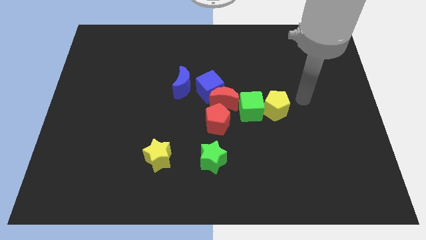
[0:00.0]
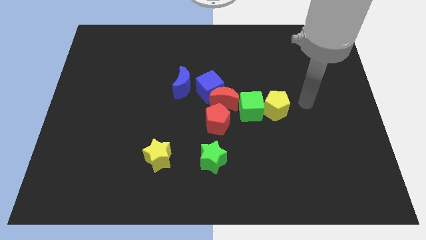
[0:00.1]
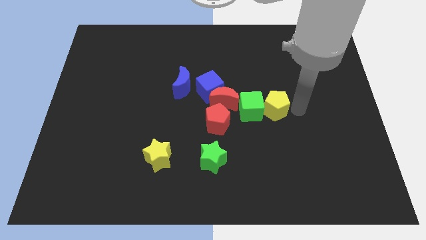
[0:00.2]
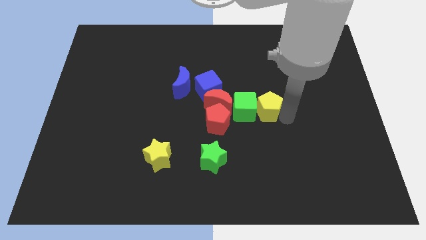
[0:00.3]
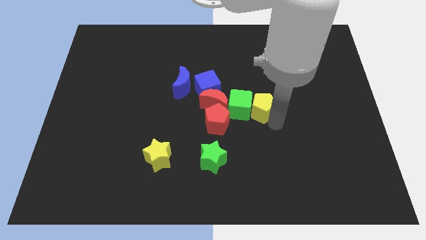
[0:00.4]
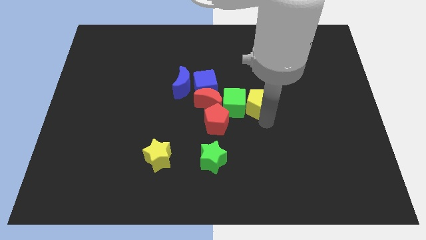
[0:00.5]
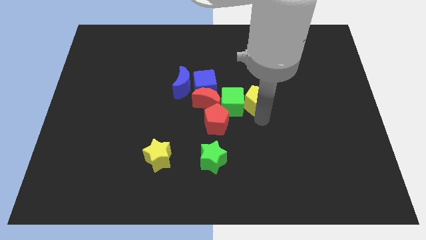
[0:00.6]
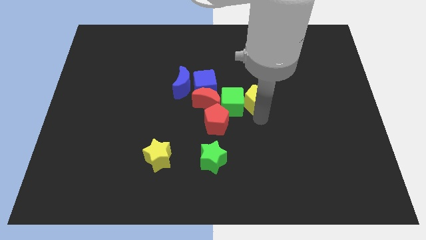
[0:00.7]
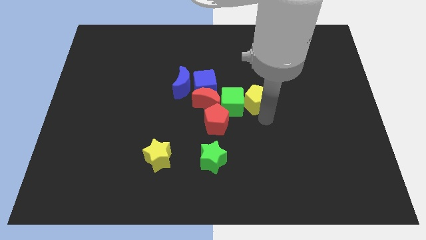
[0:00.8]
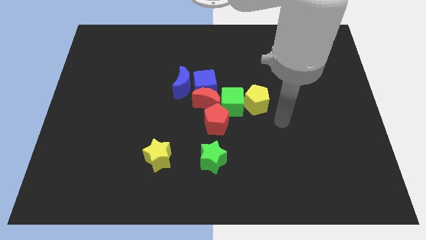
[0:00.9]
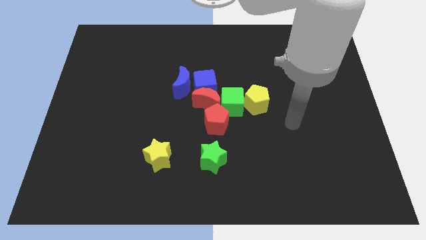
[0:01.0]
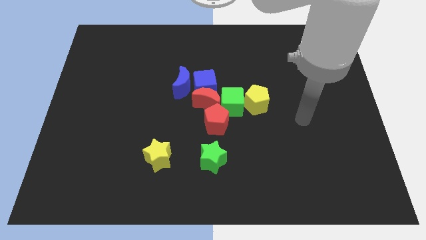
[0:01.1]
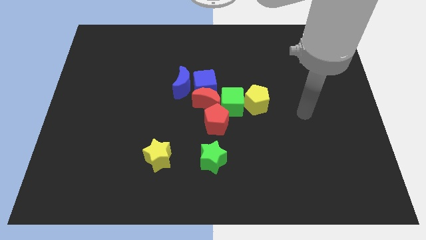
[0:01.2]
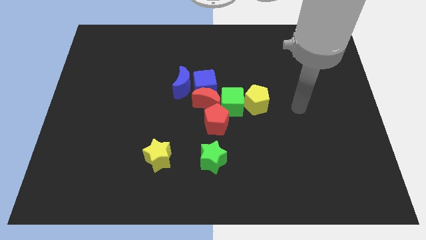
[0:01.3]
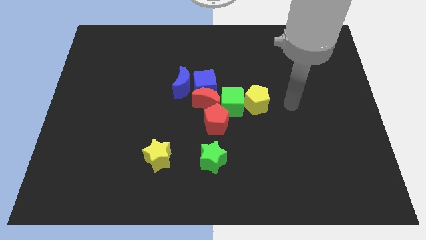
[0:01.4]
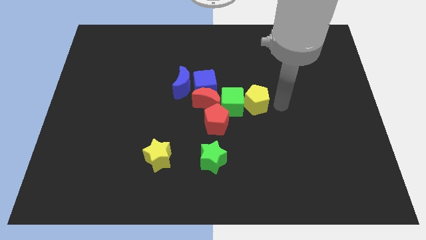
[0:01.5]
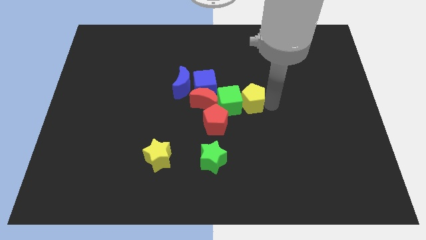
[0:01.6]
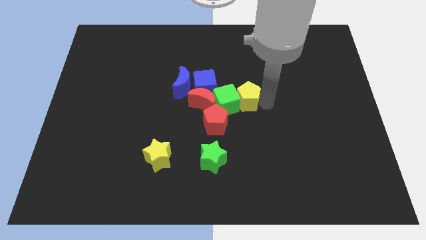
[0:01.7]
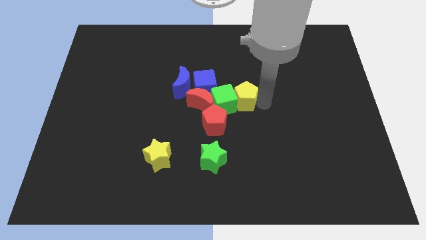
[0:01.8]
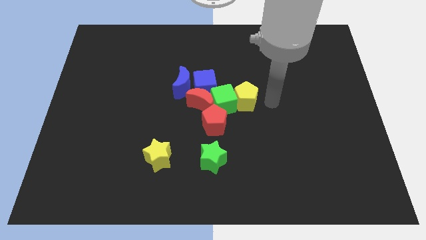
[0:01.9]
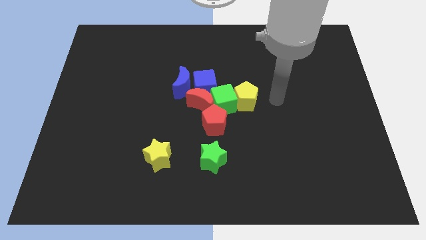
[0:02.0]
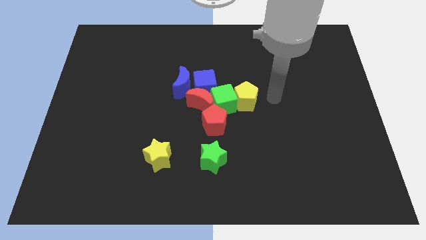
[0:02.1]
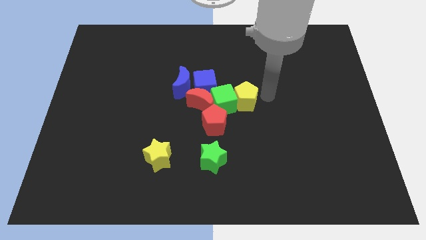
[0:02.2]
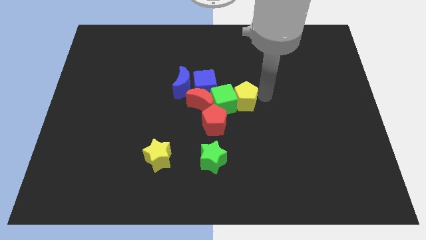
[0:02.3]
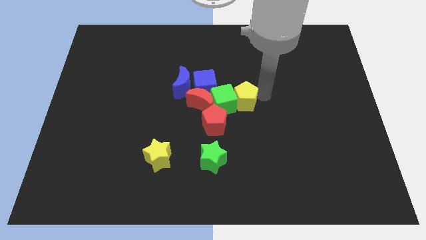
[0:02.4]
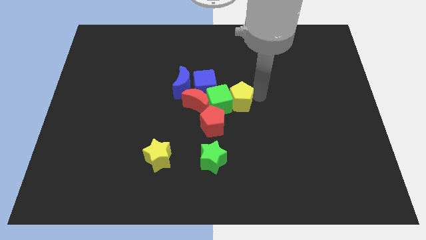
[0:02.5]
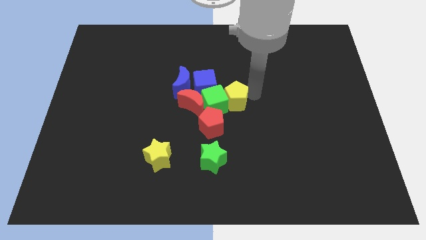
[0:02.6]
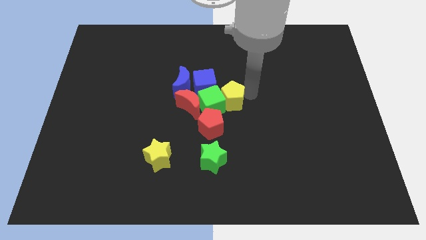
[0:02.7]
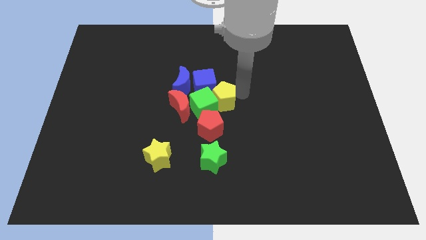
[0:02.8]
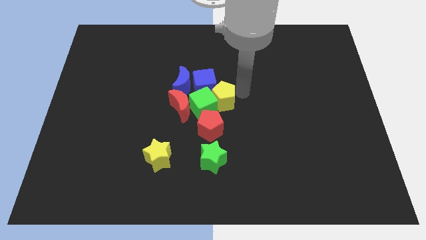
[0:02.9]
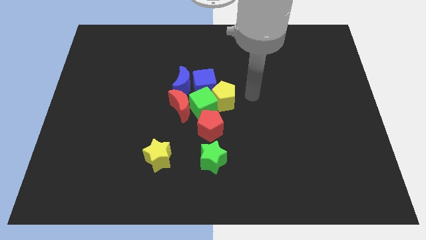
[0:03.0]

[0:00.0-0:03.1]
place yellow pentagon to the center of the board

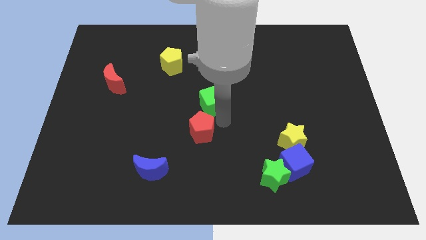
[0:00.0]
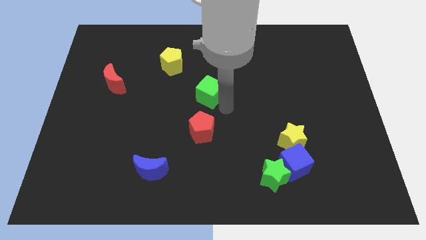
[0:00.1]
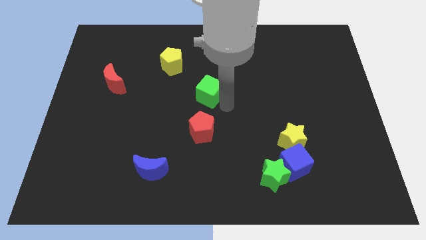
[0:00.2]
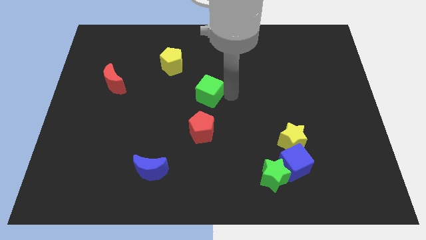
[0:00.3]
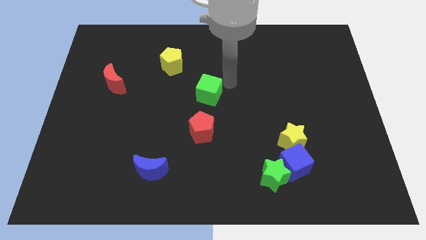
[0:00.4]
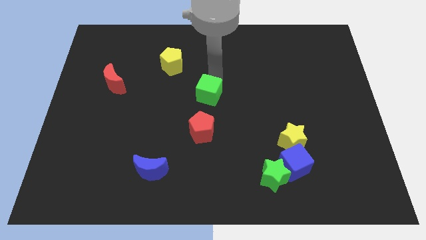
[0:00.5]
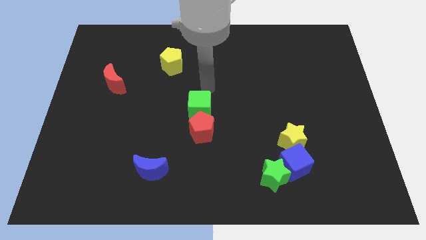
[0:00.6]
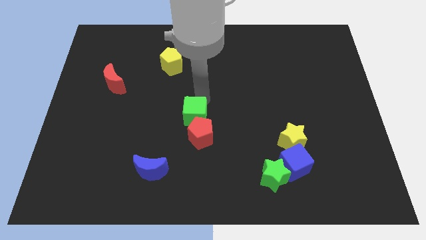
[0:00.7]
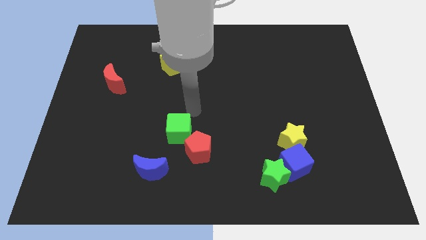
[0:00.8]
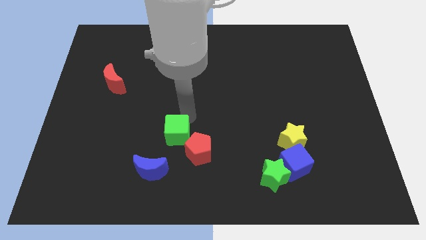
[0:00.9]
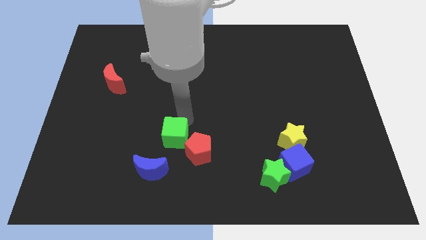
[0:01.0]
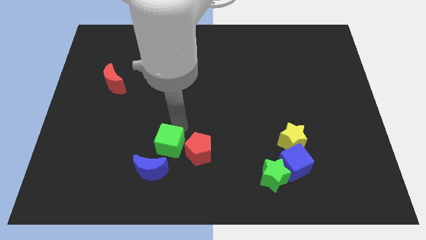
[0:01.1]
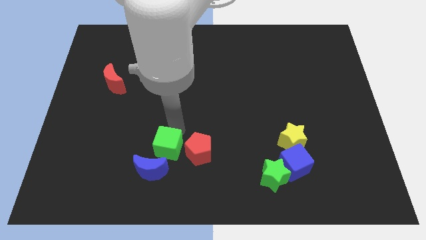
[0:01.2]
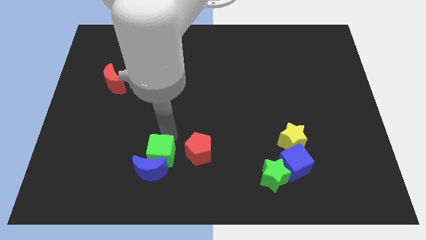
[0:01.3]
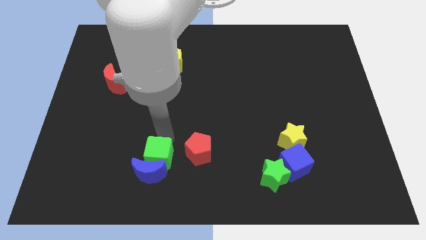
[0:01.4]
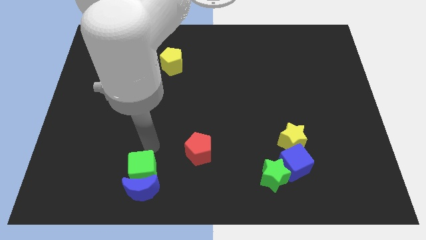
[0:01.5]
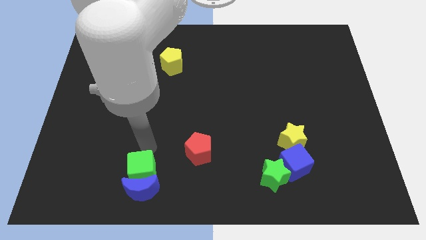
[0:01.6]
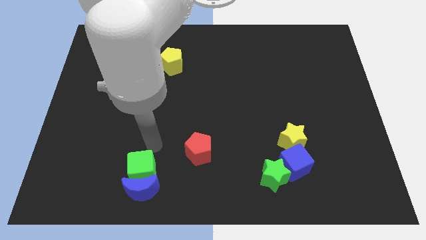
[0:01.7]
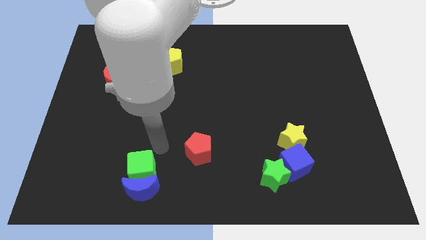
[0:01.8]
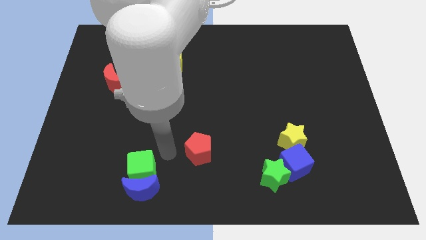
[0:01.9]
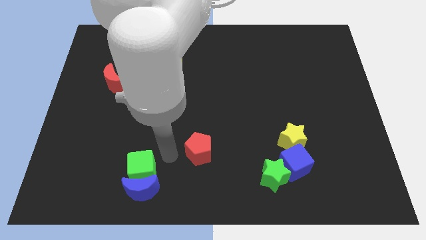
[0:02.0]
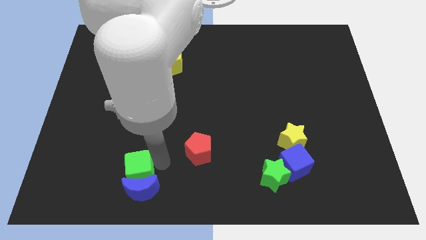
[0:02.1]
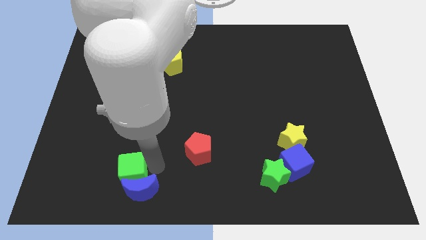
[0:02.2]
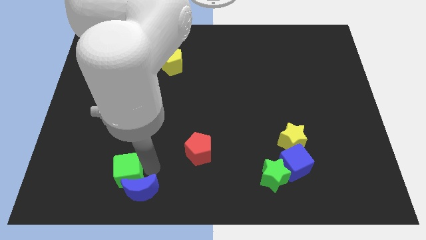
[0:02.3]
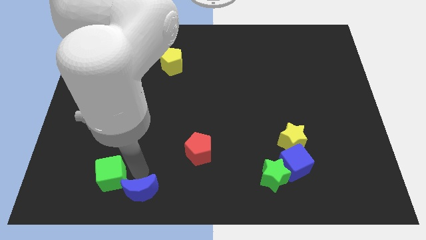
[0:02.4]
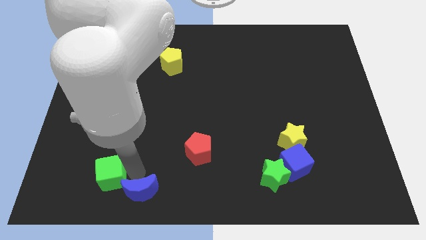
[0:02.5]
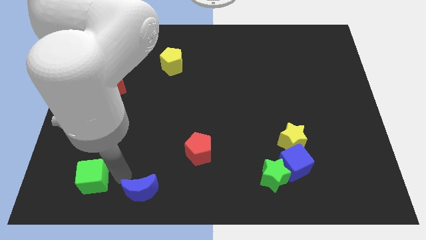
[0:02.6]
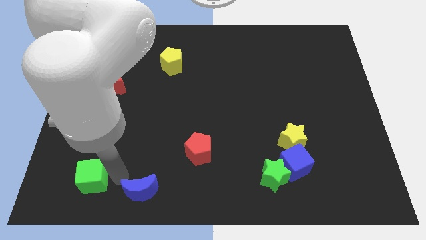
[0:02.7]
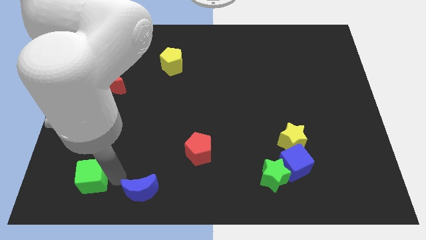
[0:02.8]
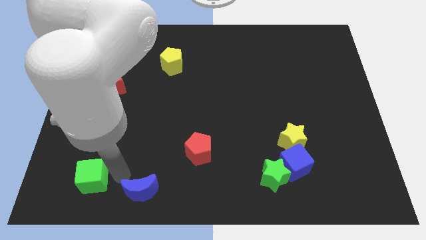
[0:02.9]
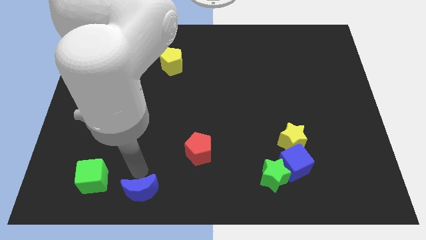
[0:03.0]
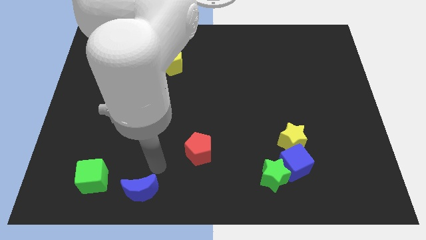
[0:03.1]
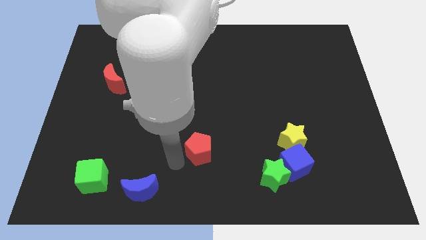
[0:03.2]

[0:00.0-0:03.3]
place the green cube left to the blue moon

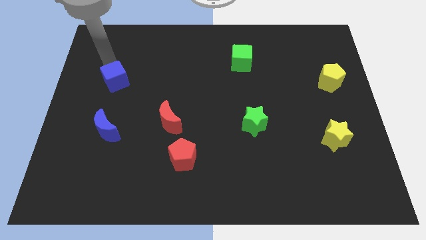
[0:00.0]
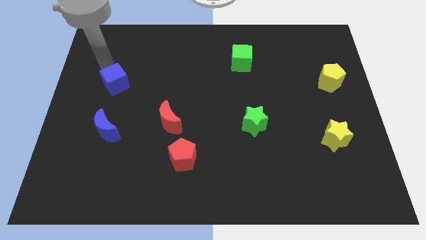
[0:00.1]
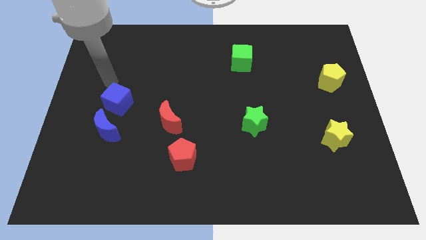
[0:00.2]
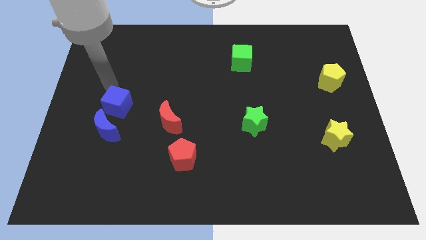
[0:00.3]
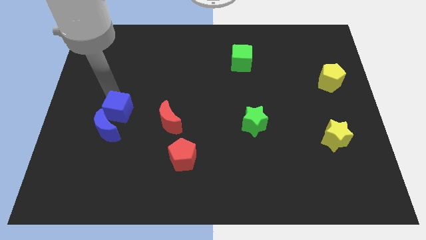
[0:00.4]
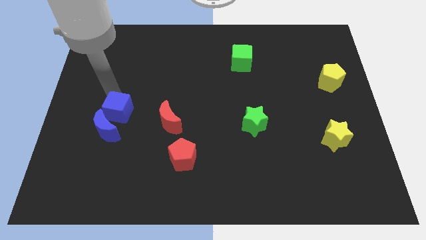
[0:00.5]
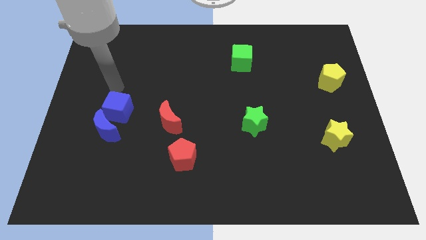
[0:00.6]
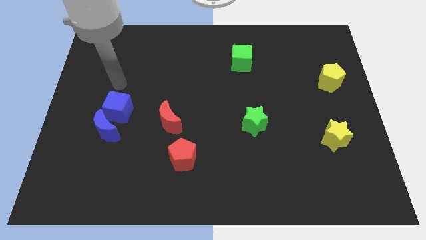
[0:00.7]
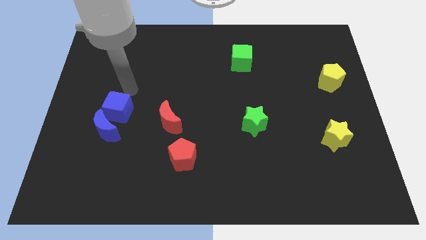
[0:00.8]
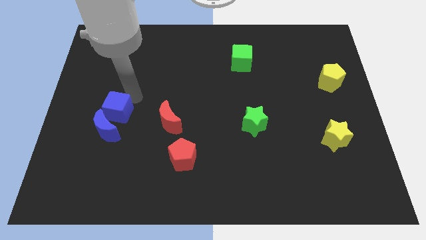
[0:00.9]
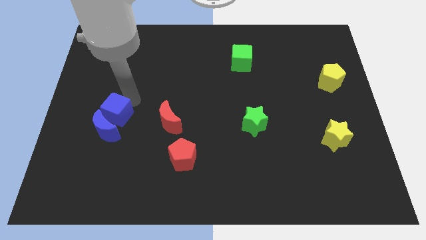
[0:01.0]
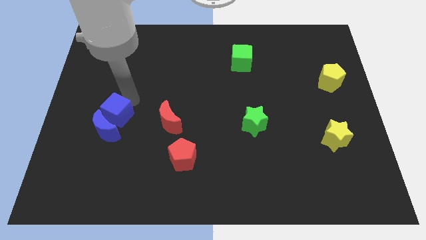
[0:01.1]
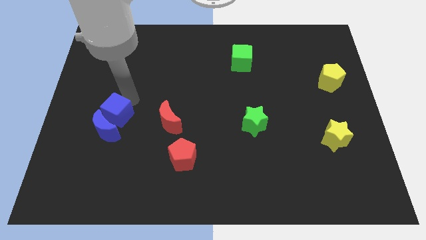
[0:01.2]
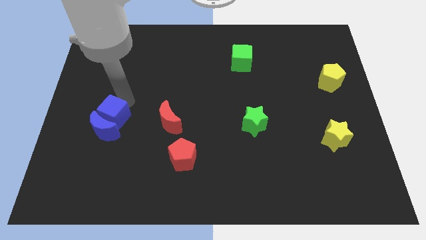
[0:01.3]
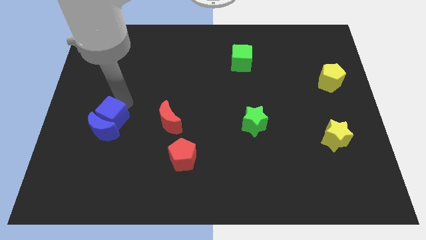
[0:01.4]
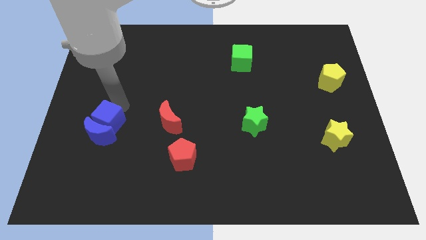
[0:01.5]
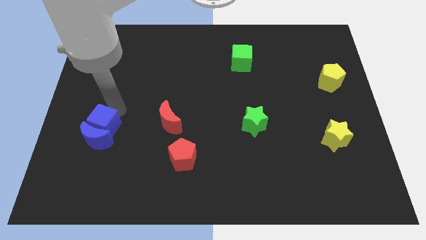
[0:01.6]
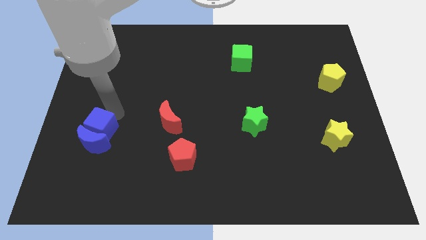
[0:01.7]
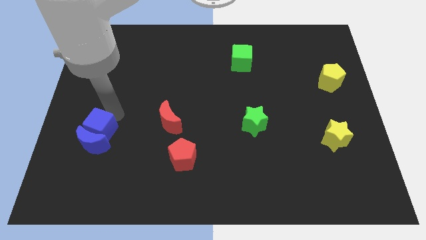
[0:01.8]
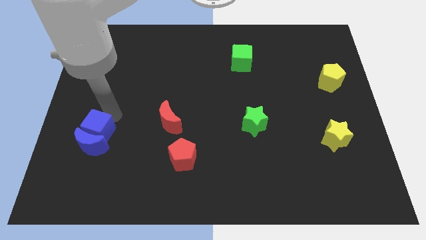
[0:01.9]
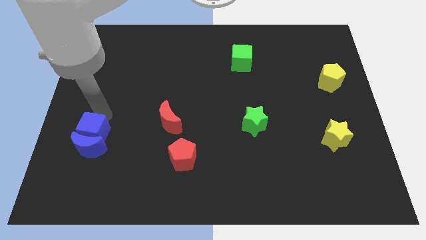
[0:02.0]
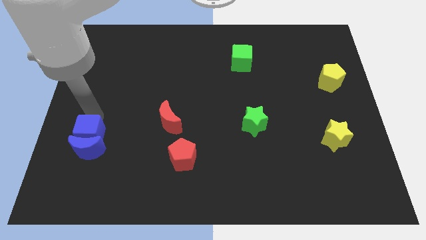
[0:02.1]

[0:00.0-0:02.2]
move the blue cube close to the blue moon

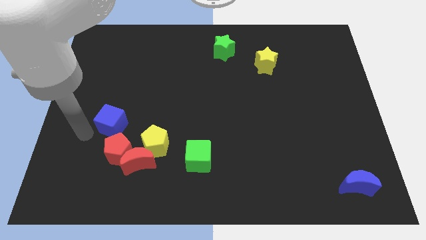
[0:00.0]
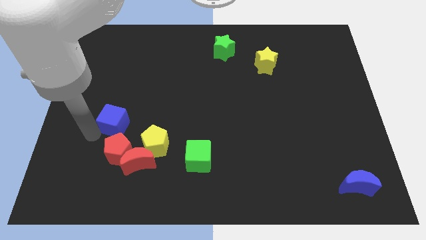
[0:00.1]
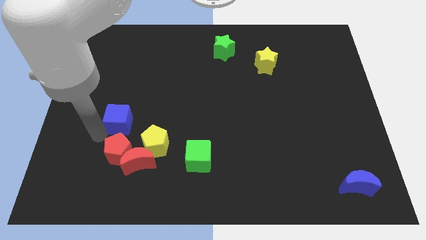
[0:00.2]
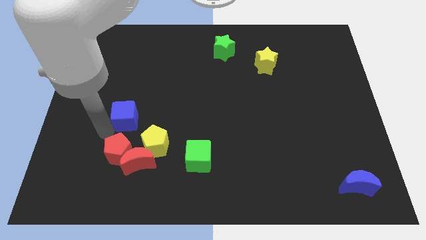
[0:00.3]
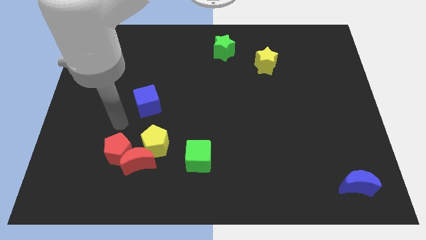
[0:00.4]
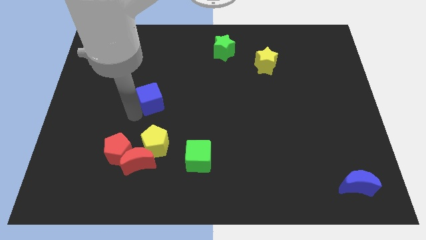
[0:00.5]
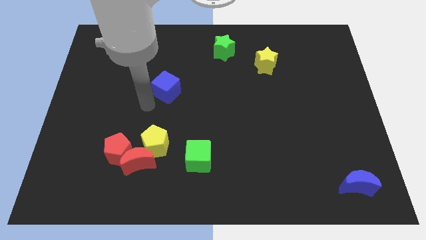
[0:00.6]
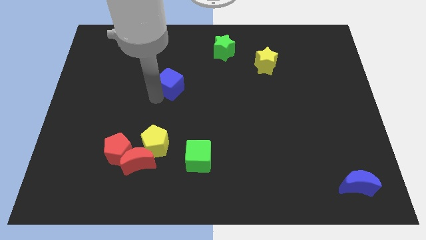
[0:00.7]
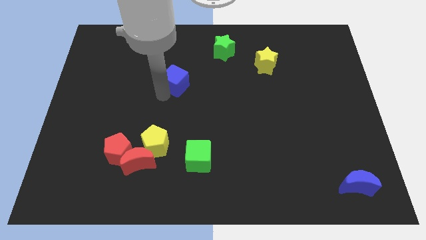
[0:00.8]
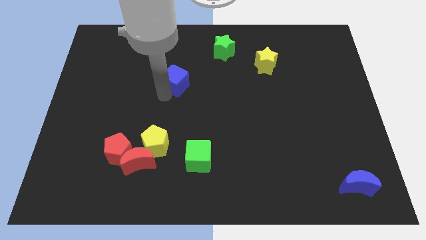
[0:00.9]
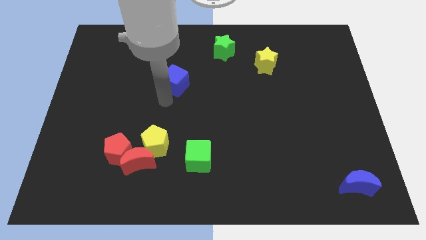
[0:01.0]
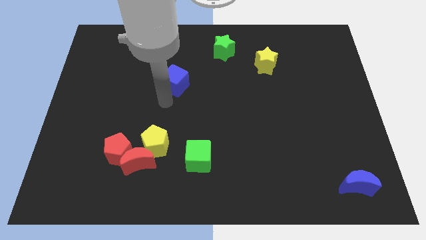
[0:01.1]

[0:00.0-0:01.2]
separate the blue cube away from the red pentagon
